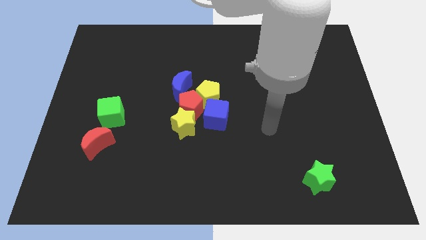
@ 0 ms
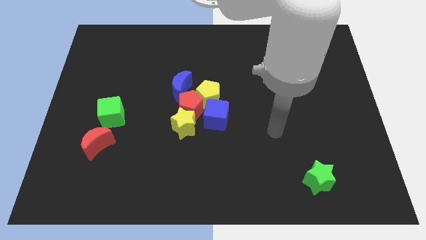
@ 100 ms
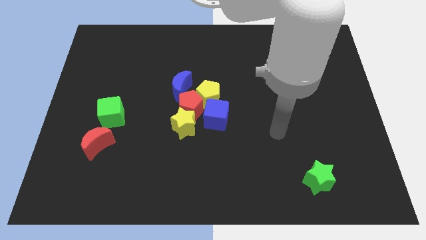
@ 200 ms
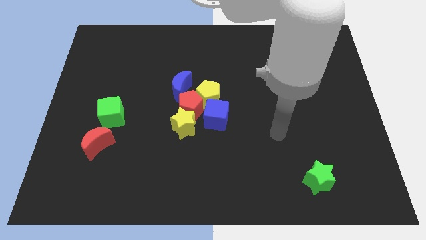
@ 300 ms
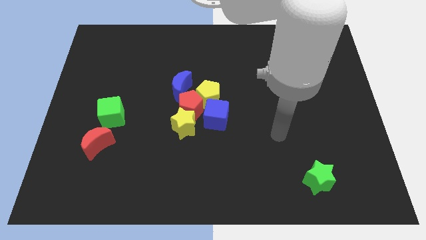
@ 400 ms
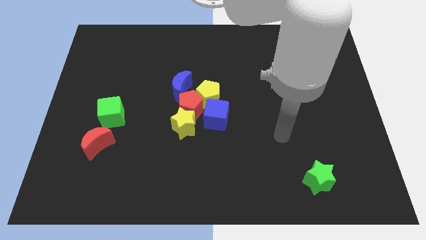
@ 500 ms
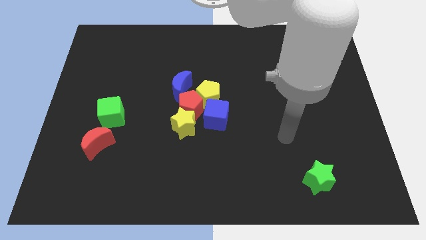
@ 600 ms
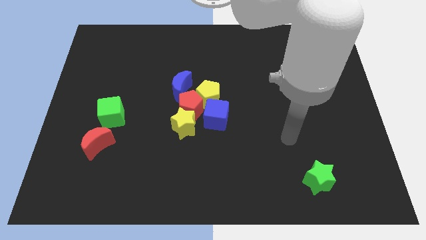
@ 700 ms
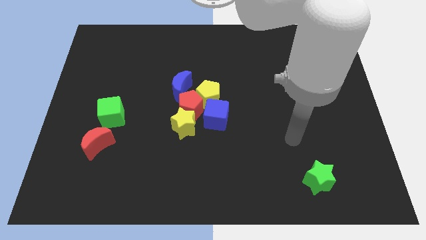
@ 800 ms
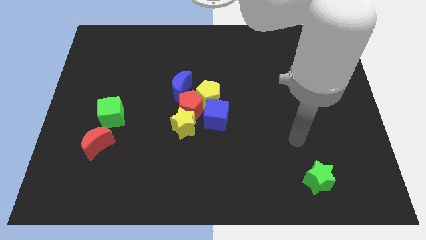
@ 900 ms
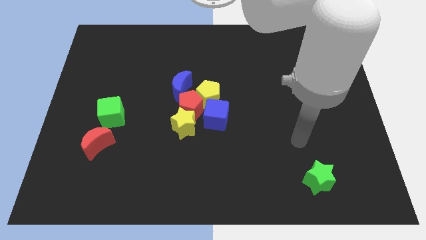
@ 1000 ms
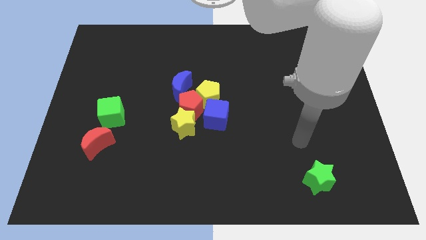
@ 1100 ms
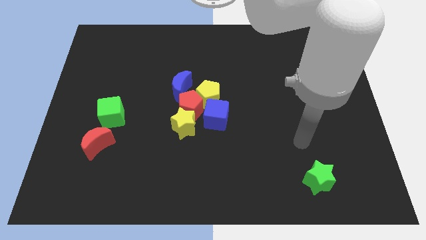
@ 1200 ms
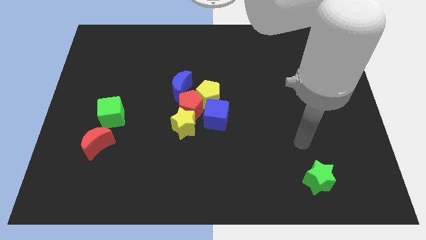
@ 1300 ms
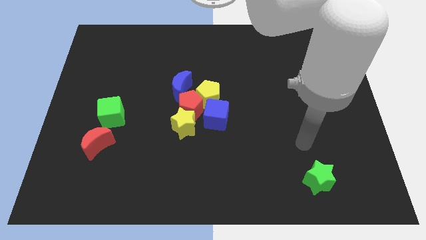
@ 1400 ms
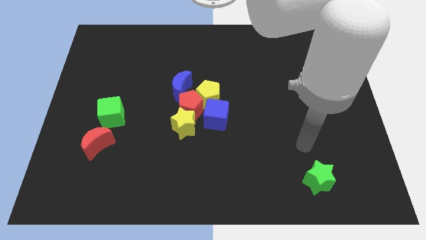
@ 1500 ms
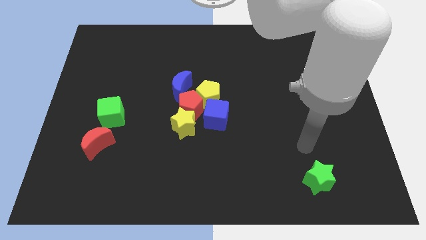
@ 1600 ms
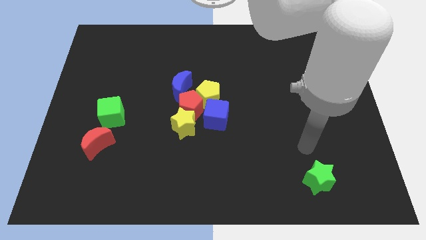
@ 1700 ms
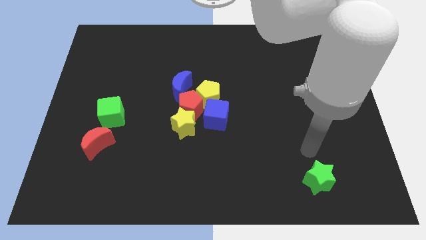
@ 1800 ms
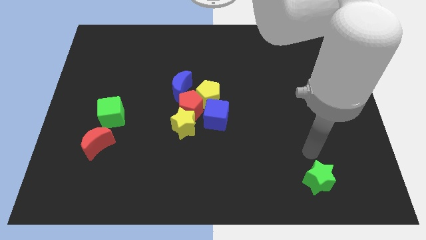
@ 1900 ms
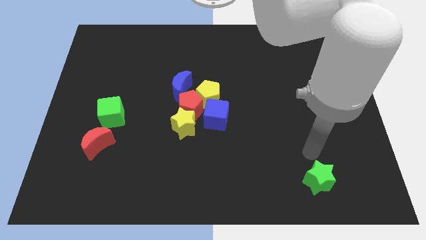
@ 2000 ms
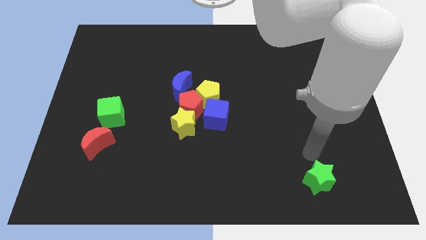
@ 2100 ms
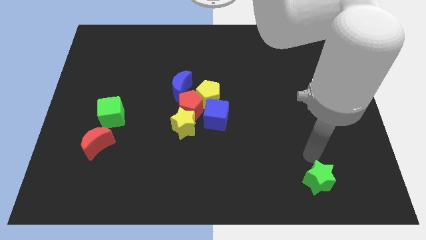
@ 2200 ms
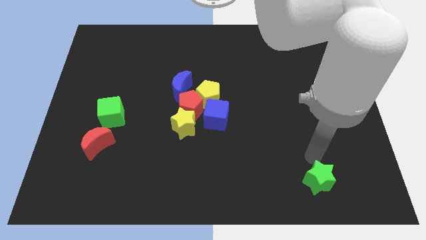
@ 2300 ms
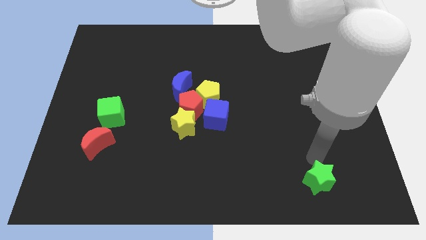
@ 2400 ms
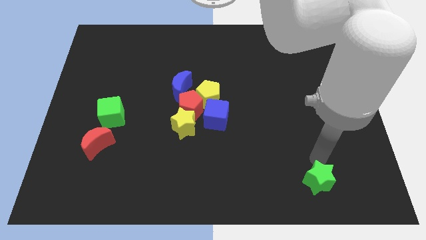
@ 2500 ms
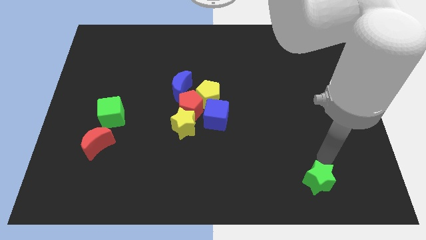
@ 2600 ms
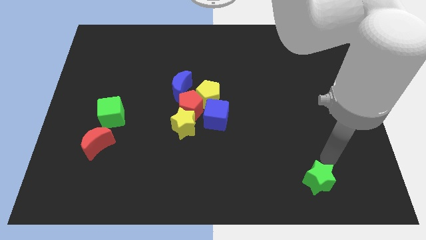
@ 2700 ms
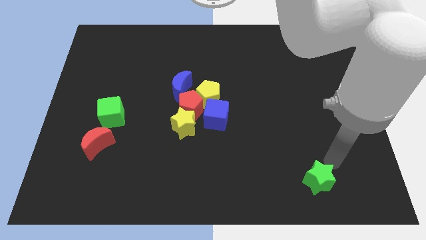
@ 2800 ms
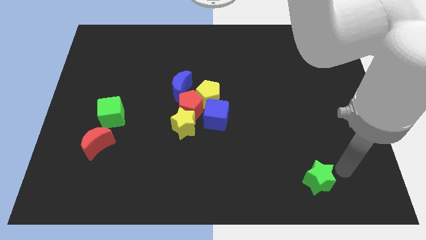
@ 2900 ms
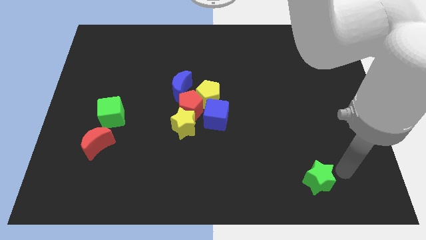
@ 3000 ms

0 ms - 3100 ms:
move the arm near the green star

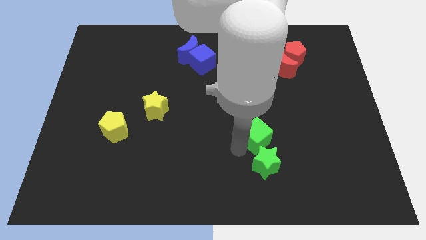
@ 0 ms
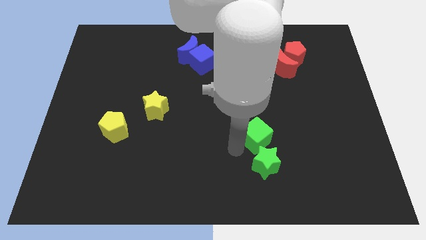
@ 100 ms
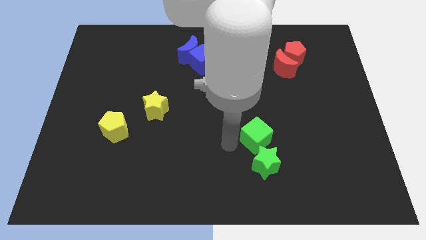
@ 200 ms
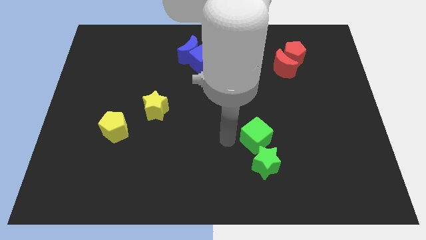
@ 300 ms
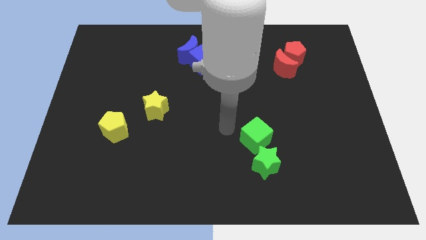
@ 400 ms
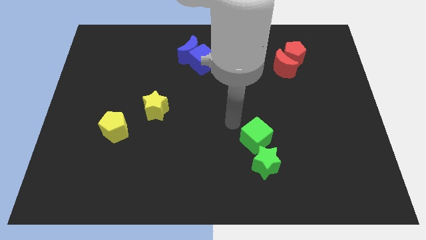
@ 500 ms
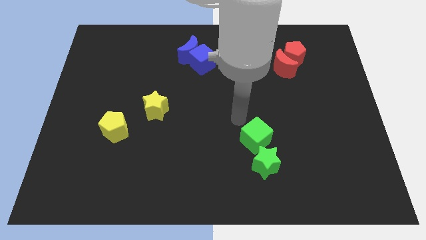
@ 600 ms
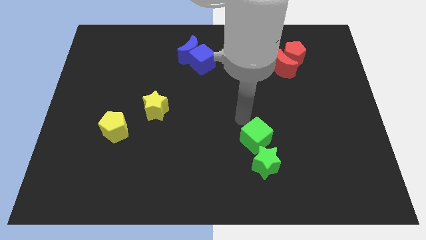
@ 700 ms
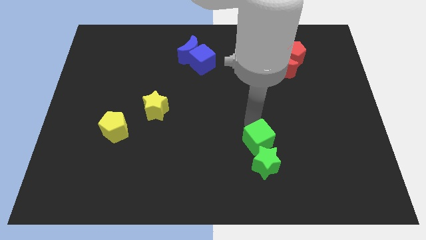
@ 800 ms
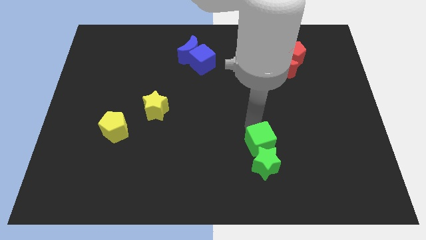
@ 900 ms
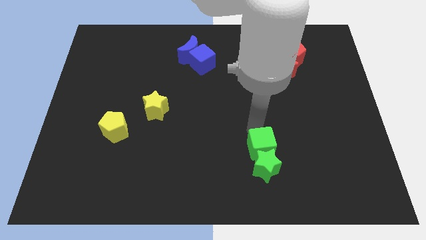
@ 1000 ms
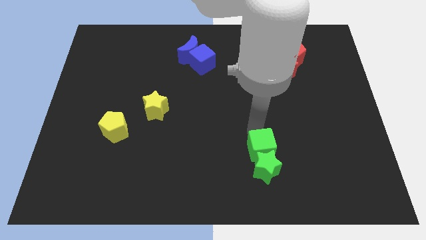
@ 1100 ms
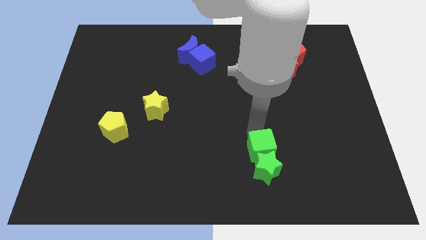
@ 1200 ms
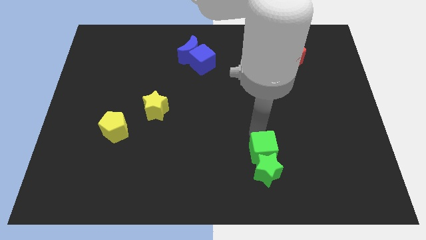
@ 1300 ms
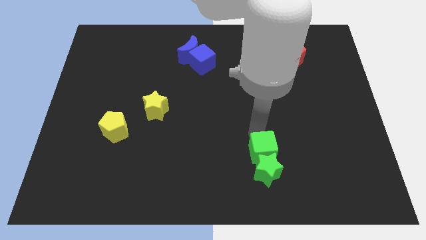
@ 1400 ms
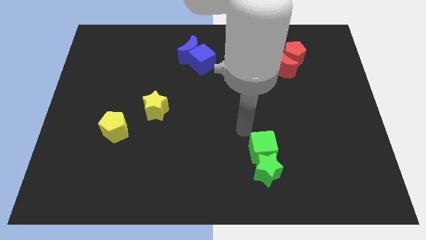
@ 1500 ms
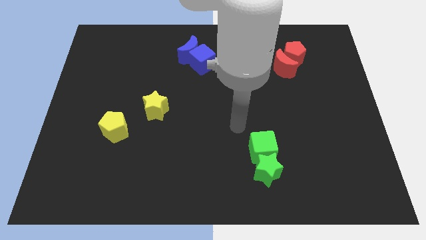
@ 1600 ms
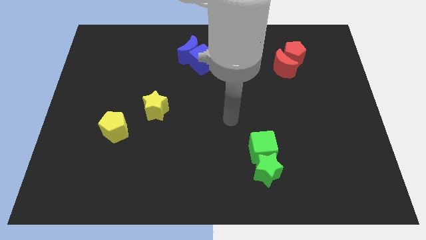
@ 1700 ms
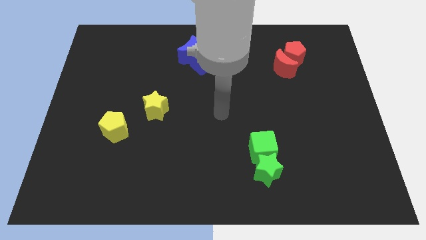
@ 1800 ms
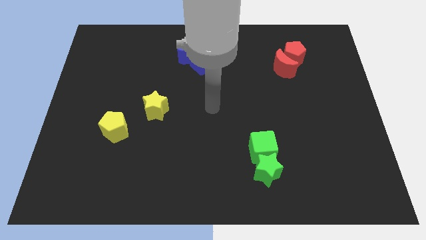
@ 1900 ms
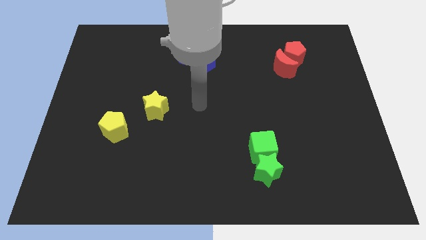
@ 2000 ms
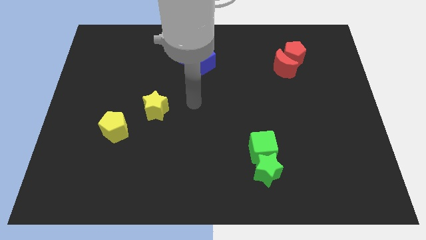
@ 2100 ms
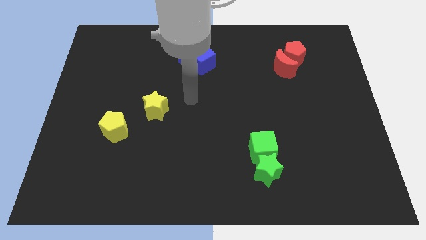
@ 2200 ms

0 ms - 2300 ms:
push green cube slightly to the bottom

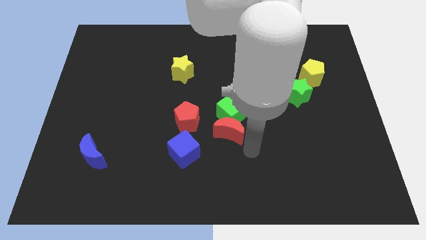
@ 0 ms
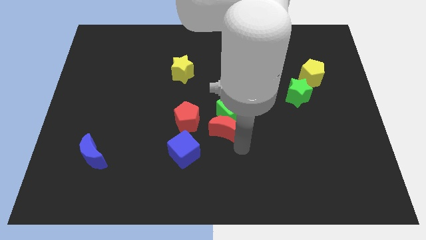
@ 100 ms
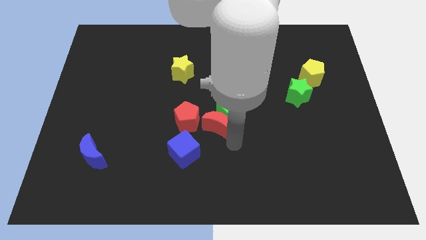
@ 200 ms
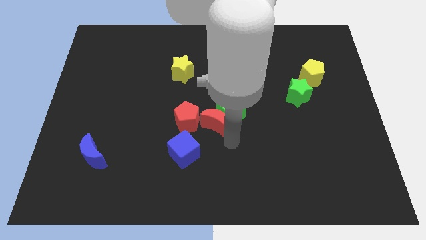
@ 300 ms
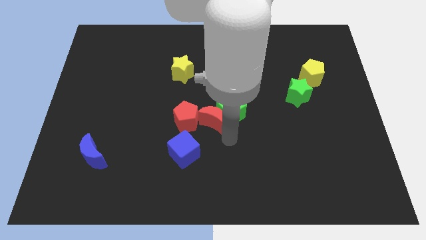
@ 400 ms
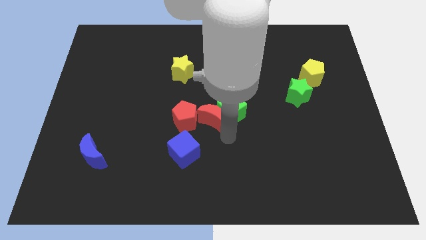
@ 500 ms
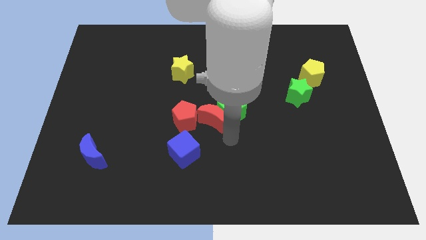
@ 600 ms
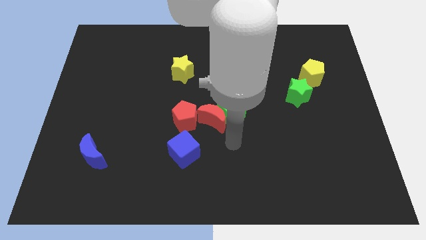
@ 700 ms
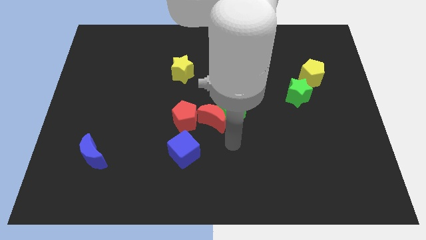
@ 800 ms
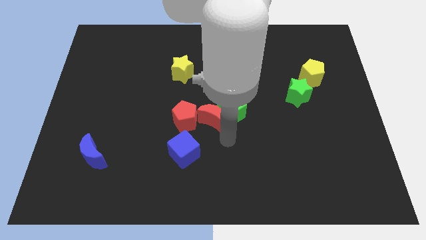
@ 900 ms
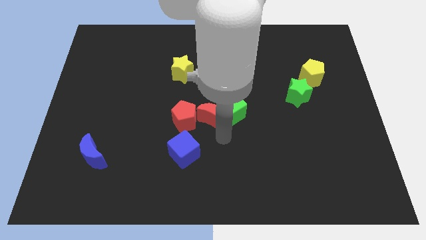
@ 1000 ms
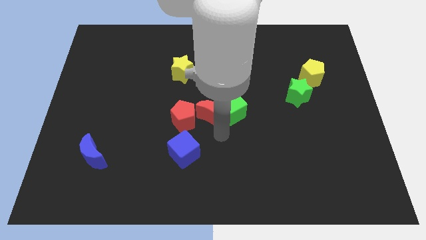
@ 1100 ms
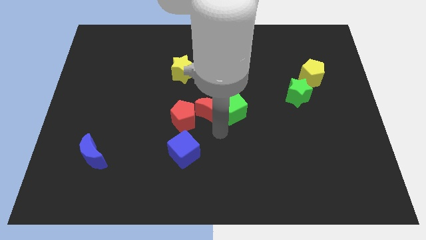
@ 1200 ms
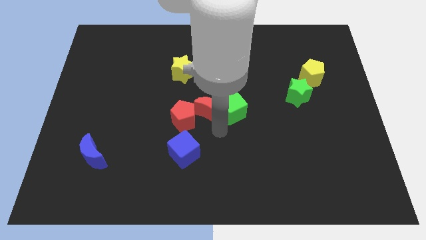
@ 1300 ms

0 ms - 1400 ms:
place the red crescent in between the red pentagon and the green cube

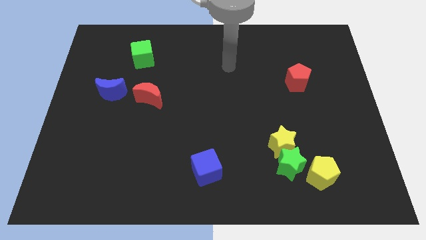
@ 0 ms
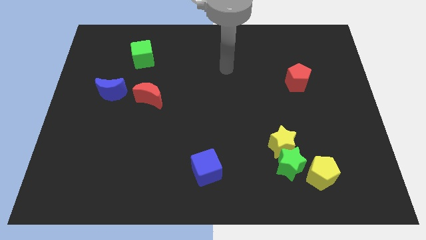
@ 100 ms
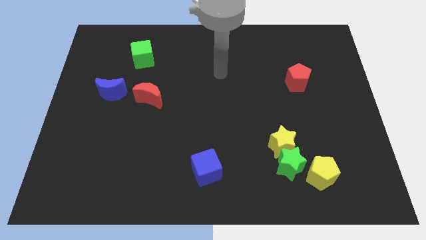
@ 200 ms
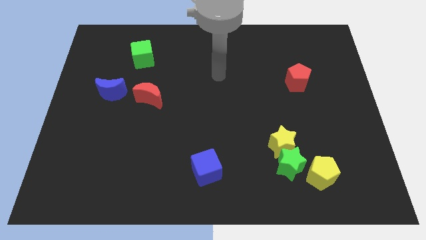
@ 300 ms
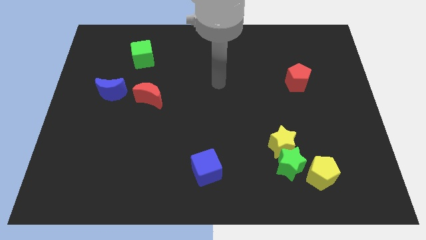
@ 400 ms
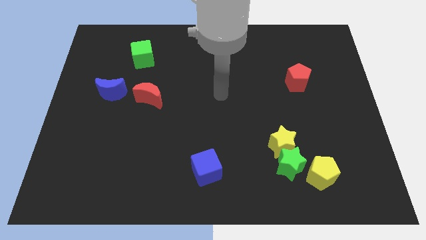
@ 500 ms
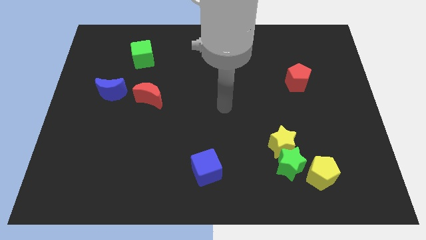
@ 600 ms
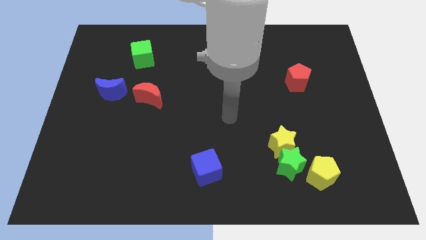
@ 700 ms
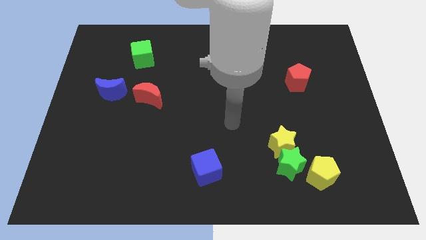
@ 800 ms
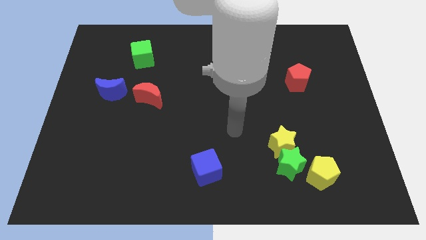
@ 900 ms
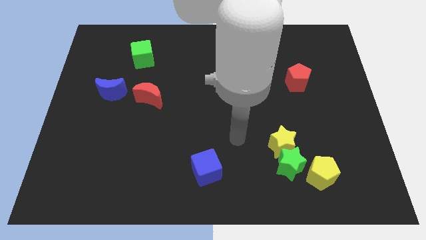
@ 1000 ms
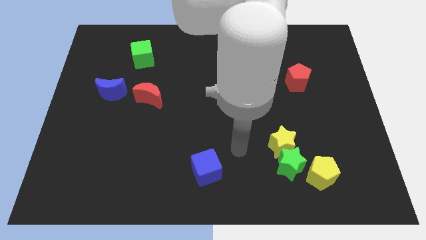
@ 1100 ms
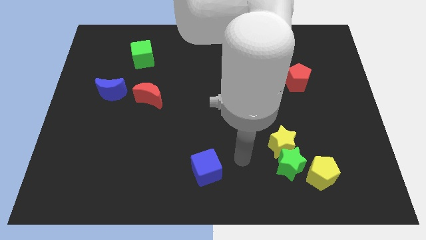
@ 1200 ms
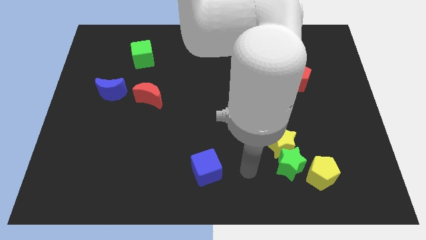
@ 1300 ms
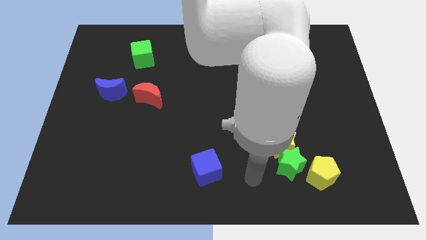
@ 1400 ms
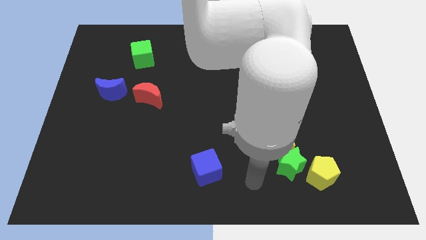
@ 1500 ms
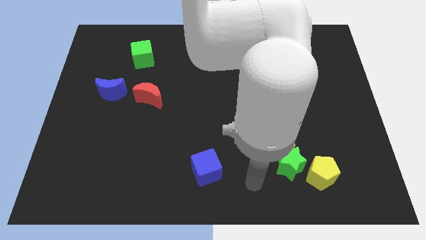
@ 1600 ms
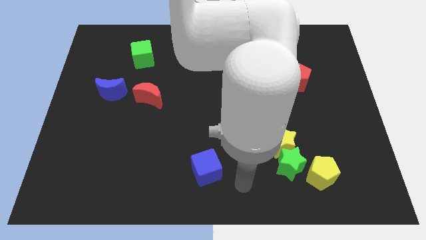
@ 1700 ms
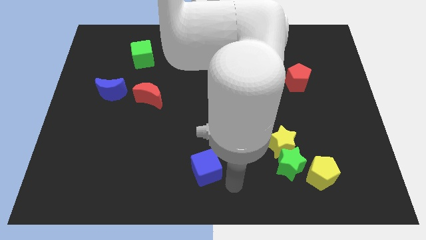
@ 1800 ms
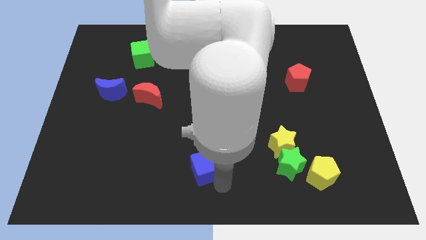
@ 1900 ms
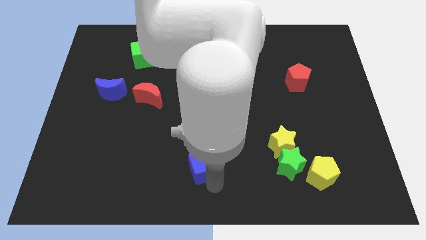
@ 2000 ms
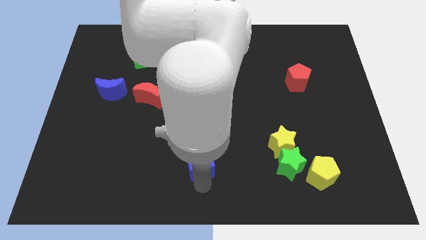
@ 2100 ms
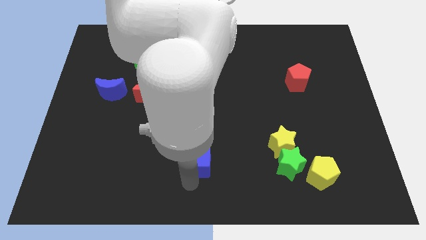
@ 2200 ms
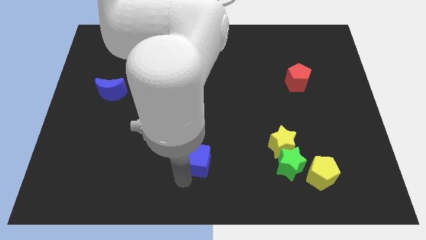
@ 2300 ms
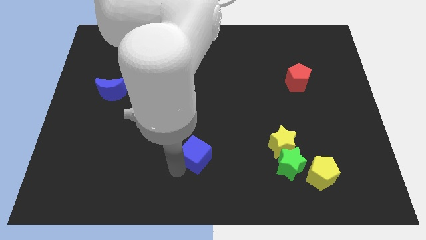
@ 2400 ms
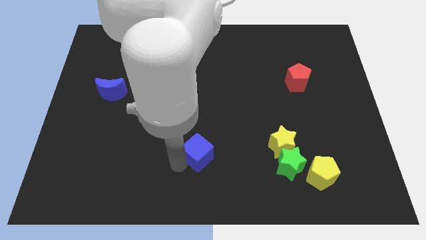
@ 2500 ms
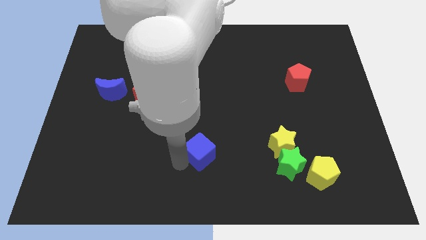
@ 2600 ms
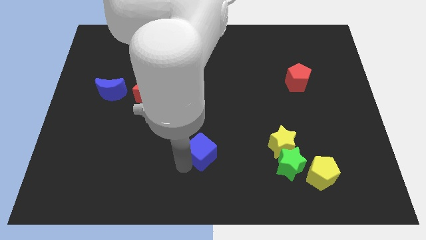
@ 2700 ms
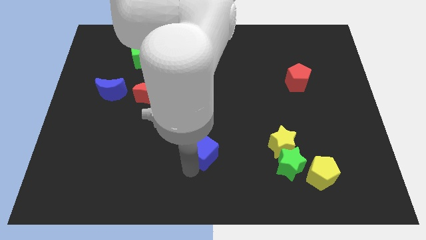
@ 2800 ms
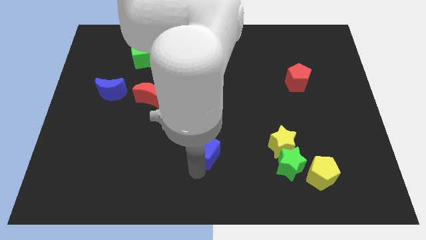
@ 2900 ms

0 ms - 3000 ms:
move arm near blue cube
